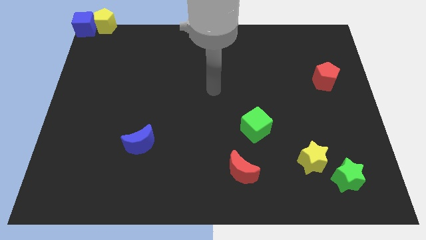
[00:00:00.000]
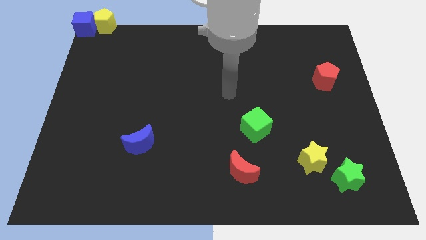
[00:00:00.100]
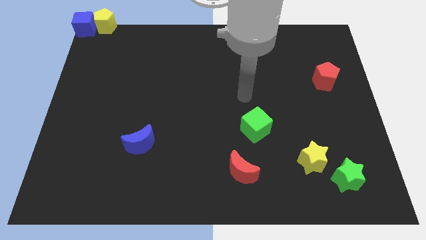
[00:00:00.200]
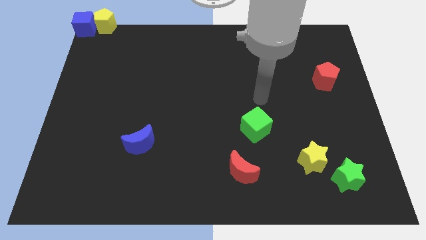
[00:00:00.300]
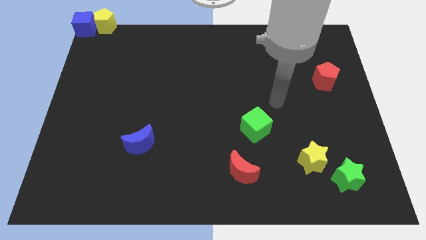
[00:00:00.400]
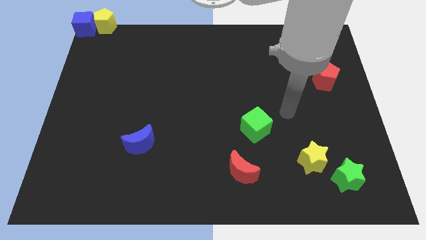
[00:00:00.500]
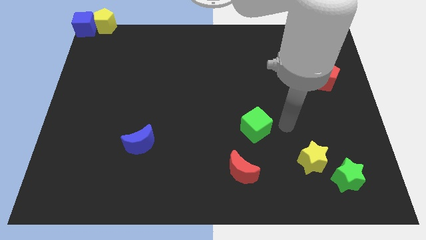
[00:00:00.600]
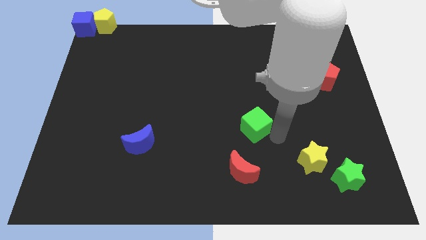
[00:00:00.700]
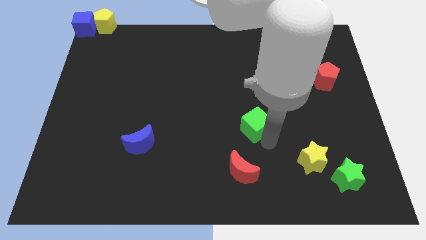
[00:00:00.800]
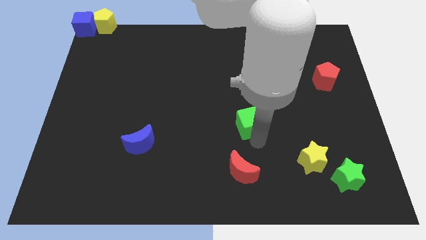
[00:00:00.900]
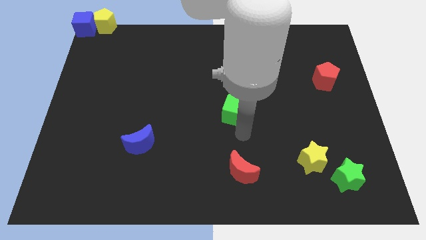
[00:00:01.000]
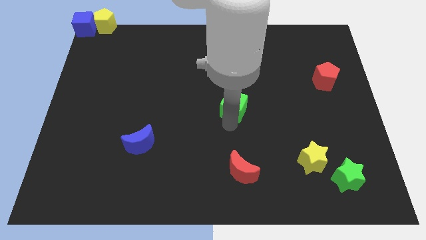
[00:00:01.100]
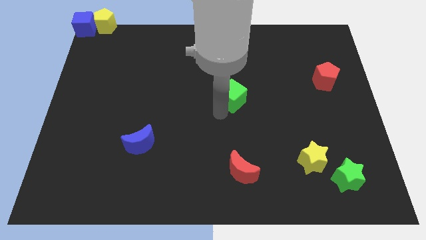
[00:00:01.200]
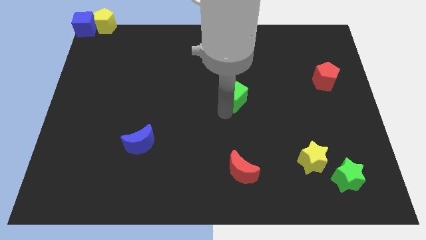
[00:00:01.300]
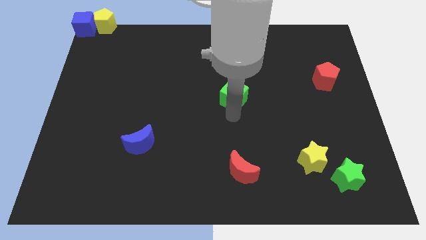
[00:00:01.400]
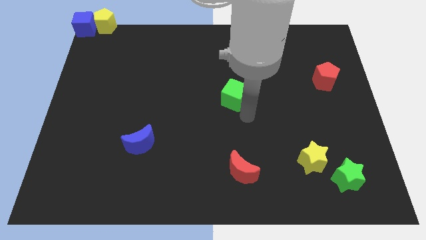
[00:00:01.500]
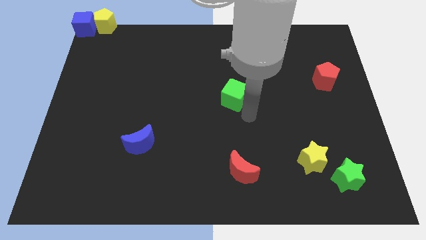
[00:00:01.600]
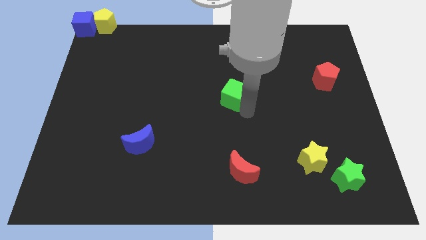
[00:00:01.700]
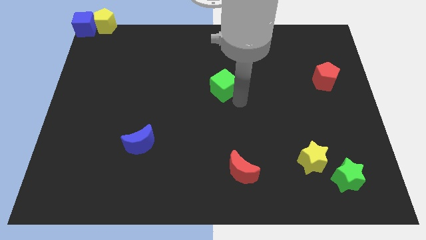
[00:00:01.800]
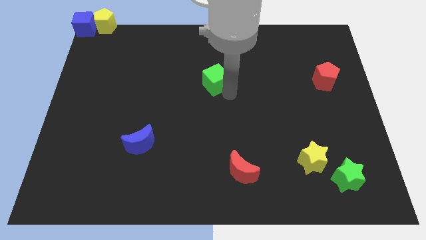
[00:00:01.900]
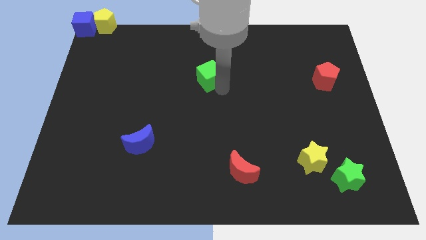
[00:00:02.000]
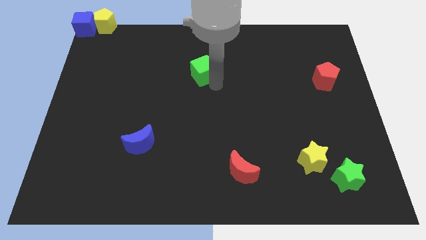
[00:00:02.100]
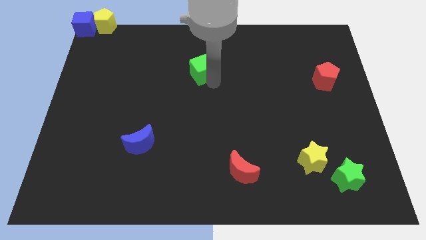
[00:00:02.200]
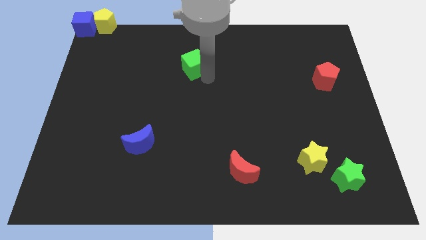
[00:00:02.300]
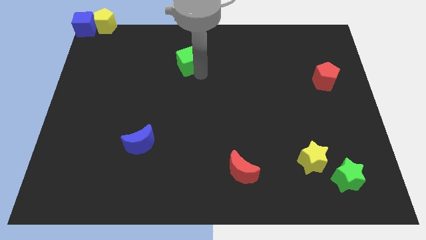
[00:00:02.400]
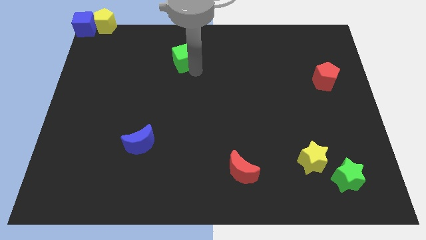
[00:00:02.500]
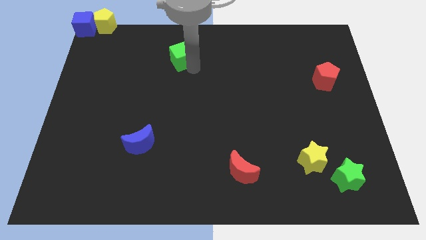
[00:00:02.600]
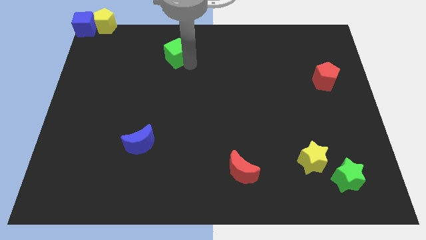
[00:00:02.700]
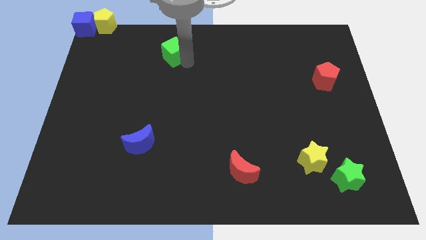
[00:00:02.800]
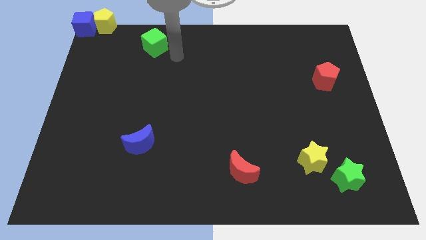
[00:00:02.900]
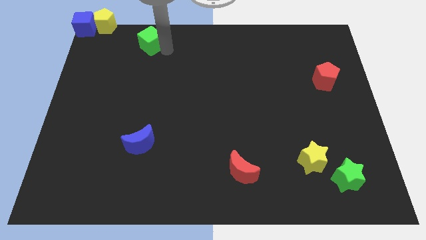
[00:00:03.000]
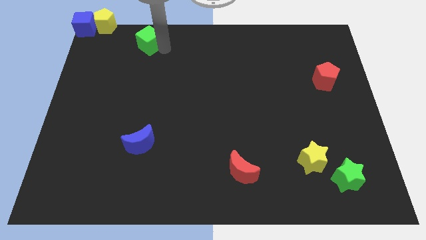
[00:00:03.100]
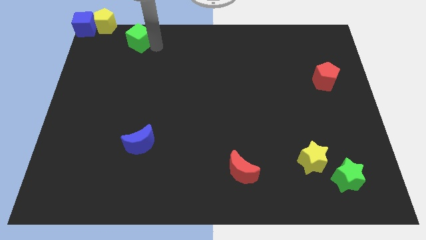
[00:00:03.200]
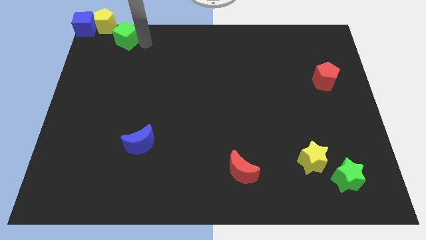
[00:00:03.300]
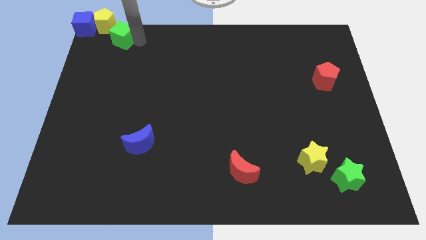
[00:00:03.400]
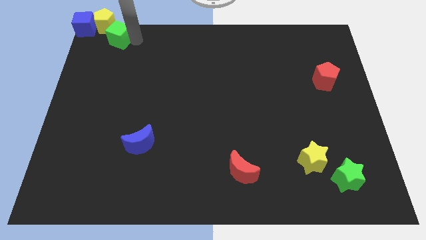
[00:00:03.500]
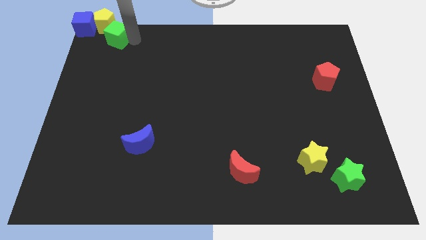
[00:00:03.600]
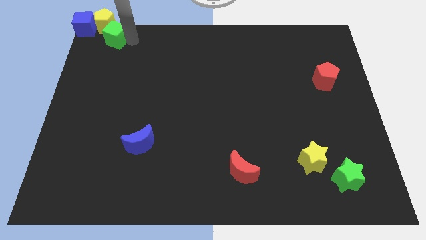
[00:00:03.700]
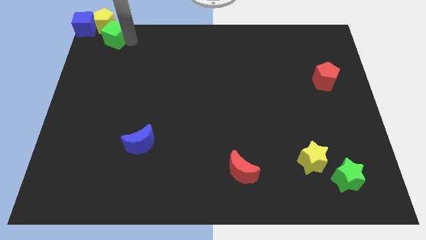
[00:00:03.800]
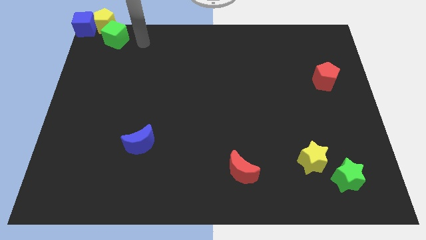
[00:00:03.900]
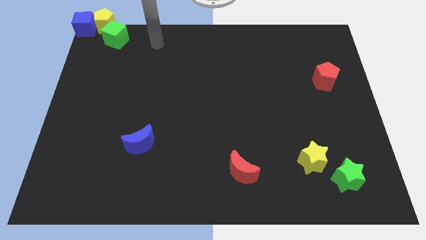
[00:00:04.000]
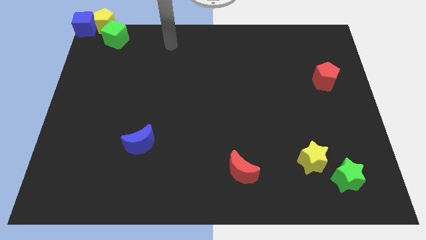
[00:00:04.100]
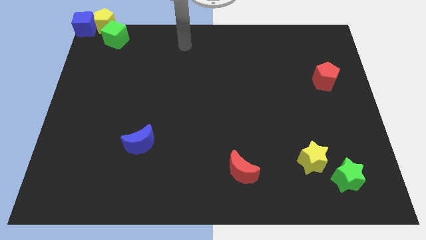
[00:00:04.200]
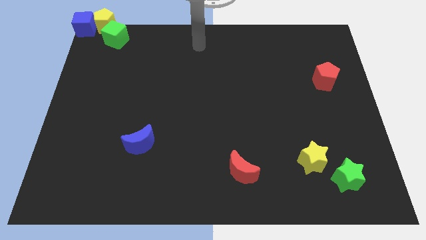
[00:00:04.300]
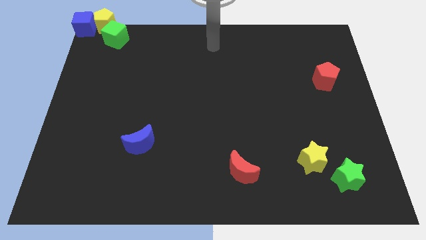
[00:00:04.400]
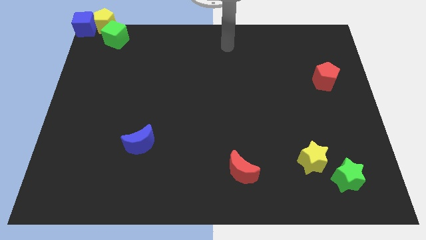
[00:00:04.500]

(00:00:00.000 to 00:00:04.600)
push the green cube to the top left corner

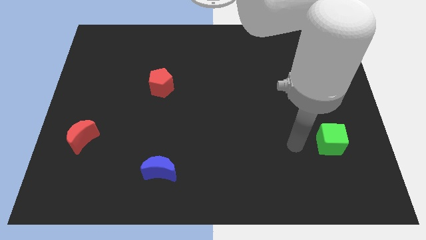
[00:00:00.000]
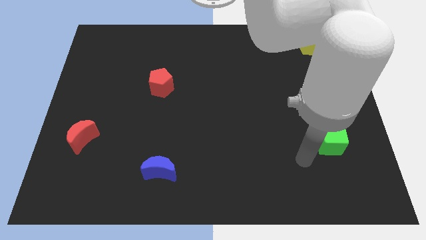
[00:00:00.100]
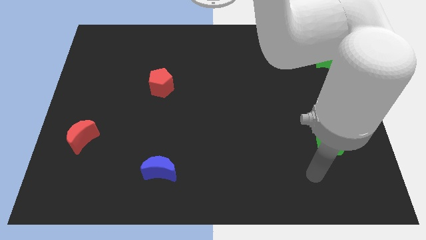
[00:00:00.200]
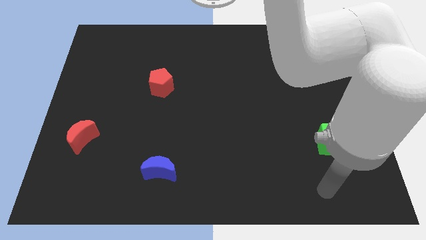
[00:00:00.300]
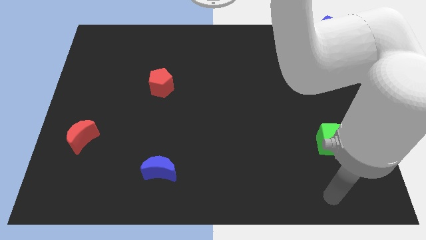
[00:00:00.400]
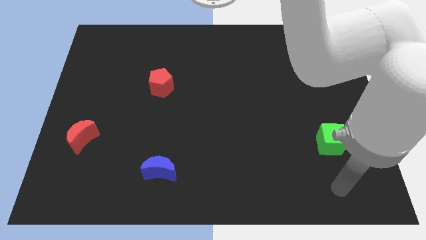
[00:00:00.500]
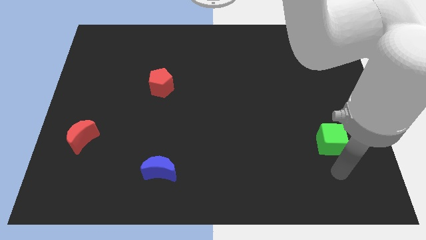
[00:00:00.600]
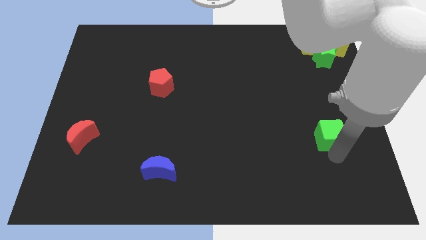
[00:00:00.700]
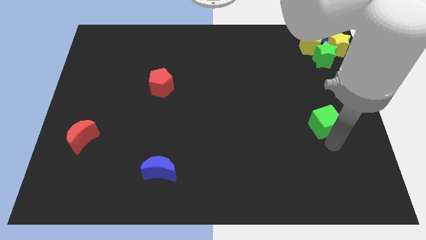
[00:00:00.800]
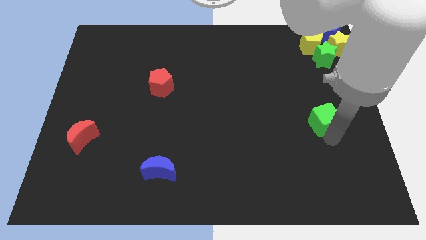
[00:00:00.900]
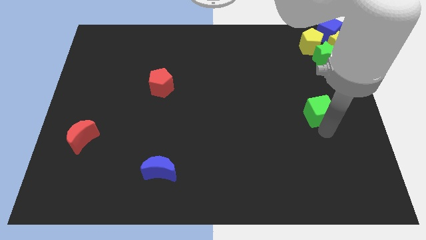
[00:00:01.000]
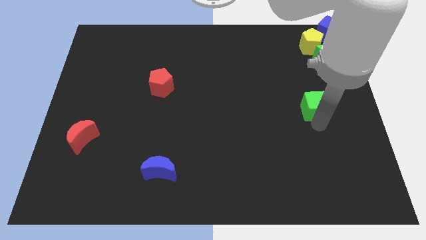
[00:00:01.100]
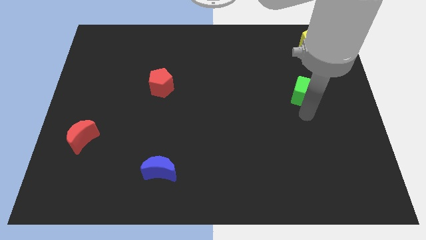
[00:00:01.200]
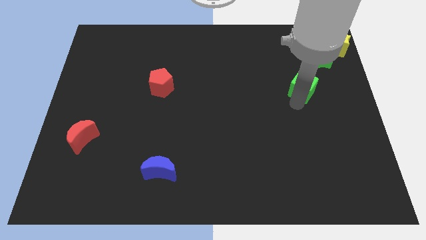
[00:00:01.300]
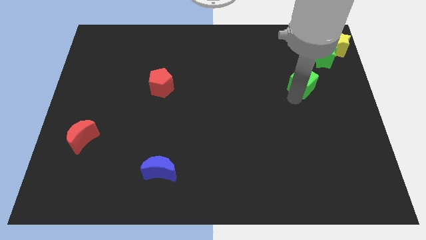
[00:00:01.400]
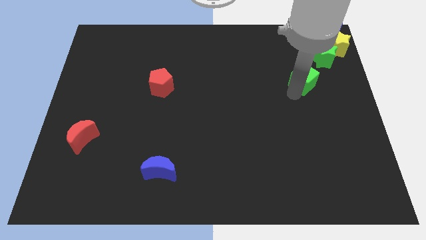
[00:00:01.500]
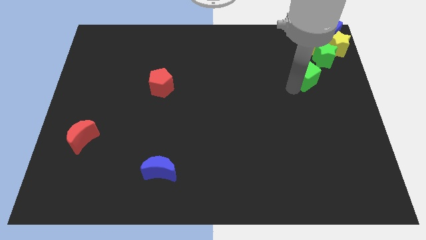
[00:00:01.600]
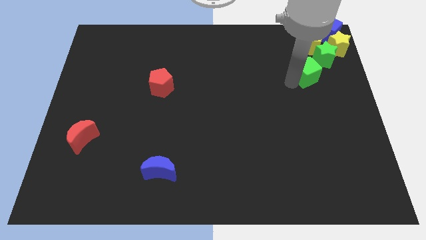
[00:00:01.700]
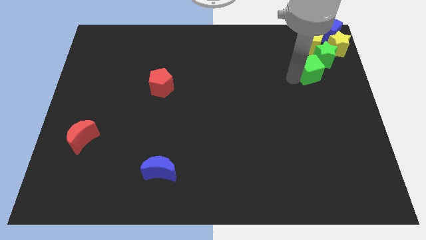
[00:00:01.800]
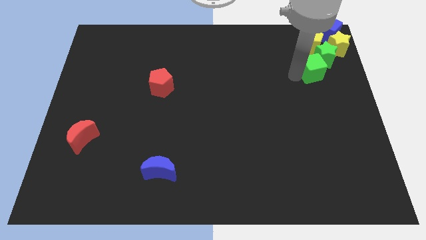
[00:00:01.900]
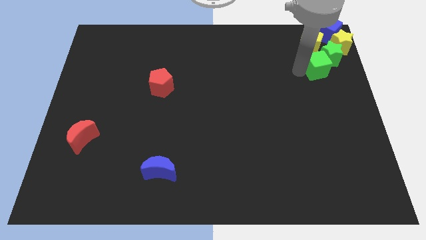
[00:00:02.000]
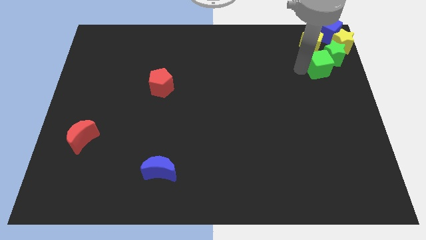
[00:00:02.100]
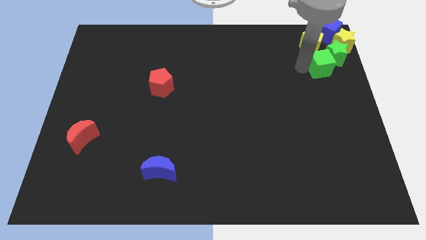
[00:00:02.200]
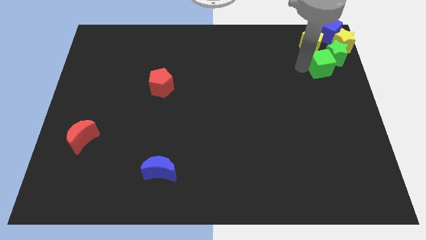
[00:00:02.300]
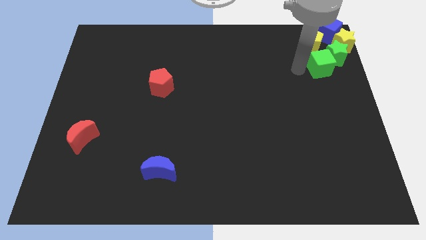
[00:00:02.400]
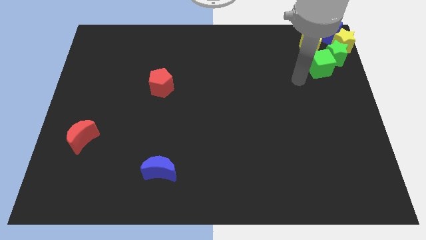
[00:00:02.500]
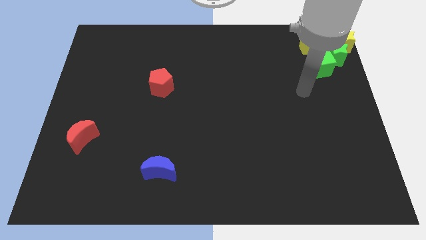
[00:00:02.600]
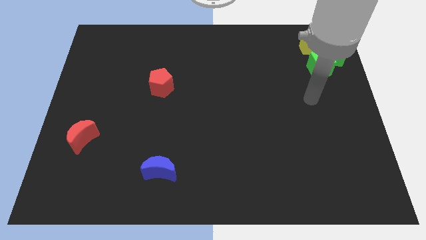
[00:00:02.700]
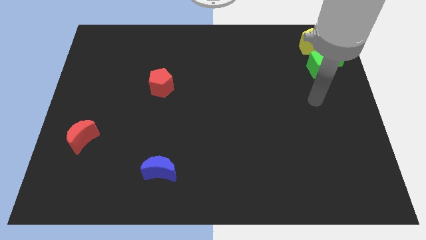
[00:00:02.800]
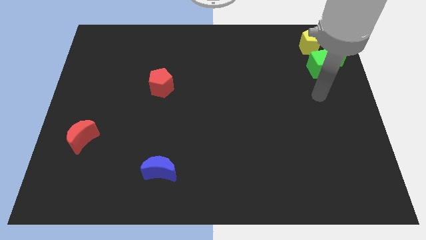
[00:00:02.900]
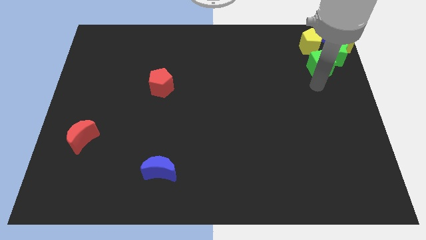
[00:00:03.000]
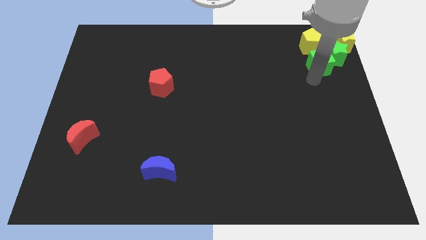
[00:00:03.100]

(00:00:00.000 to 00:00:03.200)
push the green cube into green star

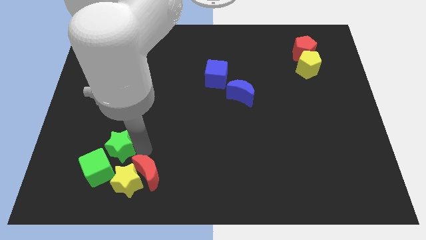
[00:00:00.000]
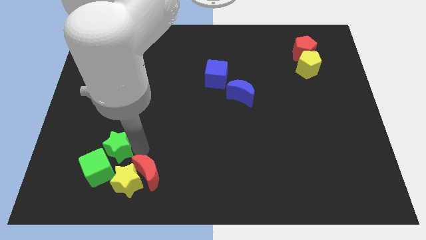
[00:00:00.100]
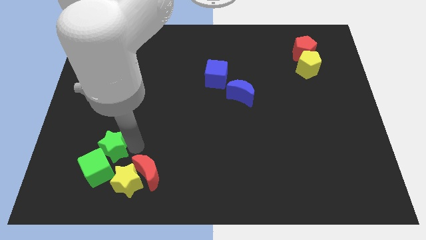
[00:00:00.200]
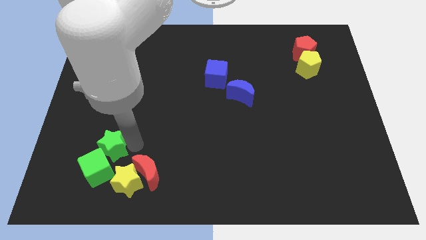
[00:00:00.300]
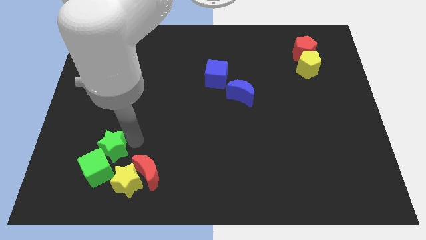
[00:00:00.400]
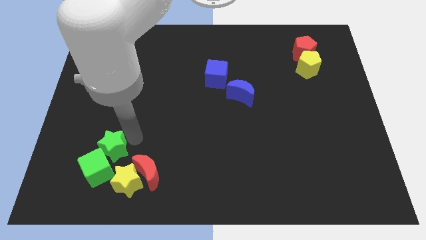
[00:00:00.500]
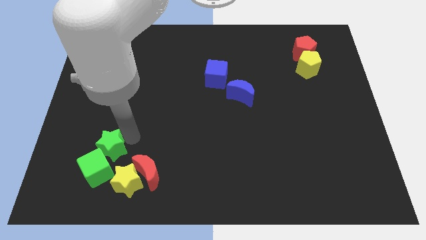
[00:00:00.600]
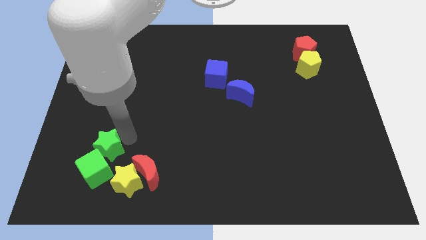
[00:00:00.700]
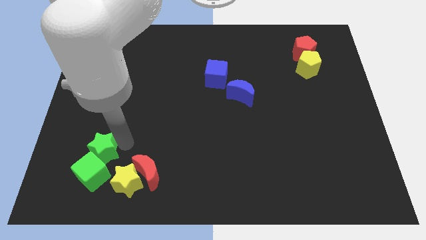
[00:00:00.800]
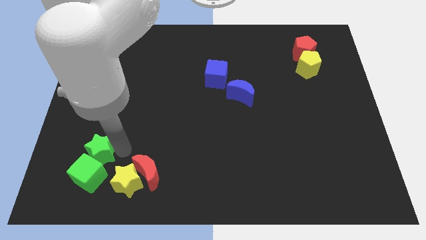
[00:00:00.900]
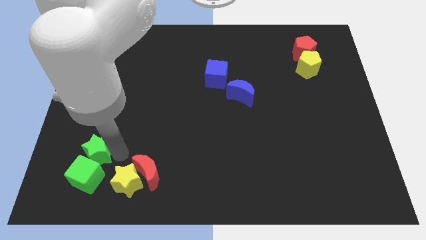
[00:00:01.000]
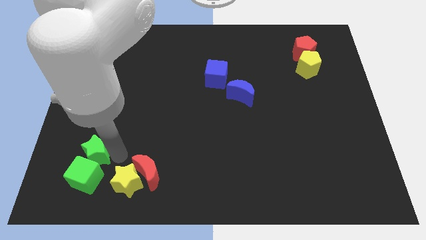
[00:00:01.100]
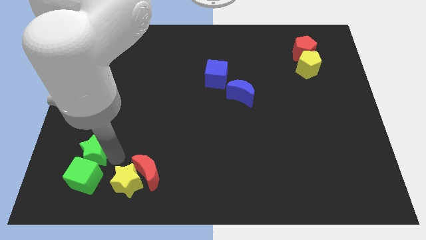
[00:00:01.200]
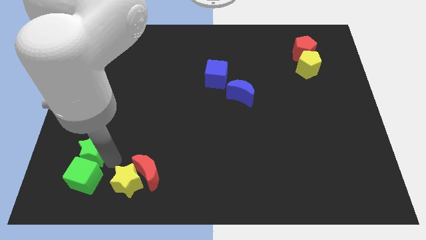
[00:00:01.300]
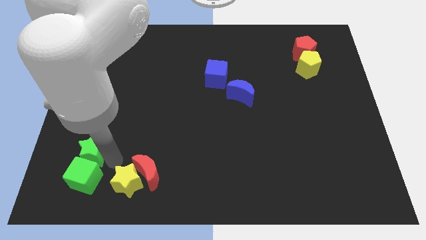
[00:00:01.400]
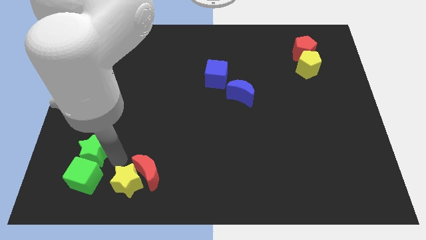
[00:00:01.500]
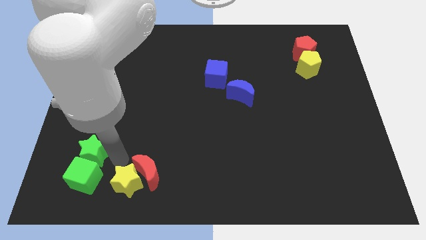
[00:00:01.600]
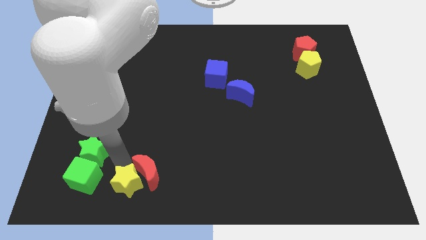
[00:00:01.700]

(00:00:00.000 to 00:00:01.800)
push the green star to the top of the green cube
